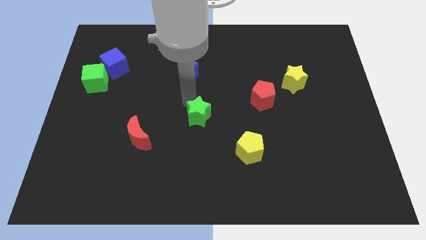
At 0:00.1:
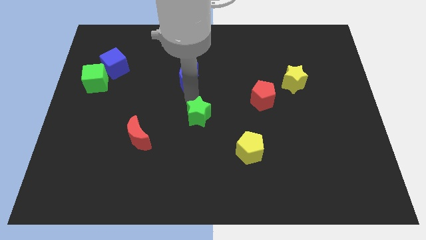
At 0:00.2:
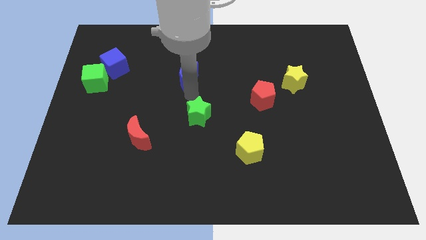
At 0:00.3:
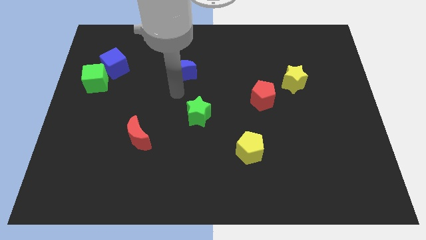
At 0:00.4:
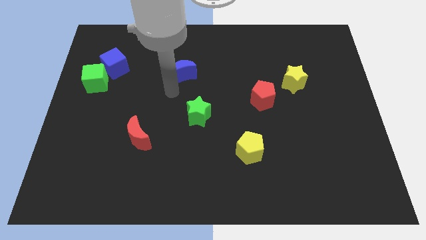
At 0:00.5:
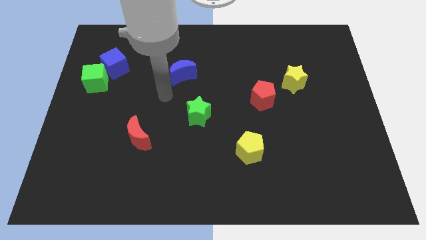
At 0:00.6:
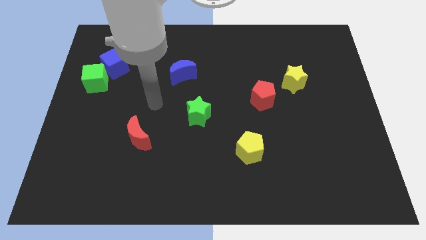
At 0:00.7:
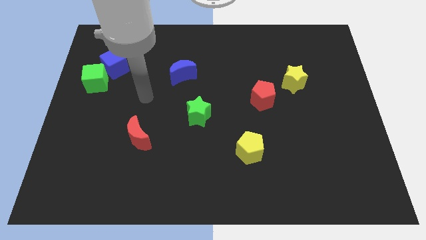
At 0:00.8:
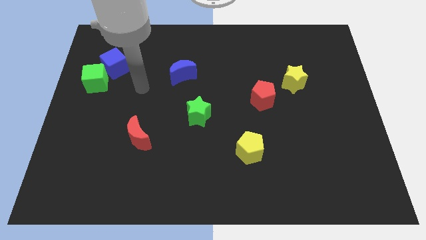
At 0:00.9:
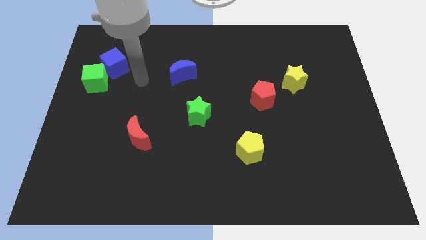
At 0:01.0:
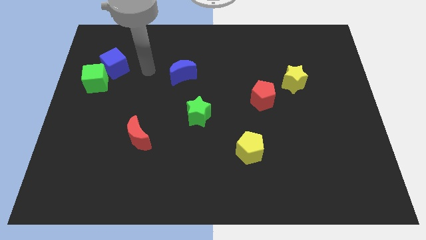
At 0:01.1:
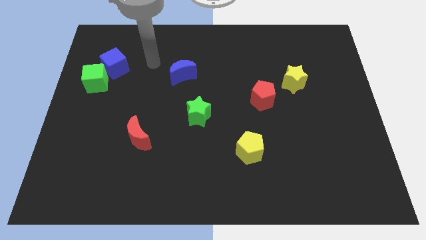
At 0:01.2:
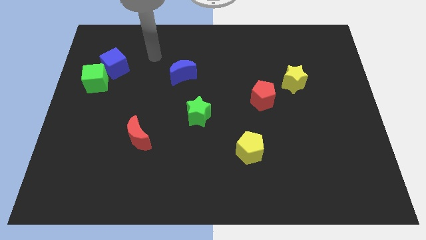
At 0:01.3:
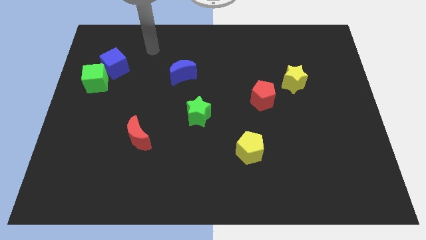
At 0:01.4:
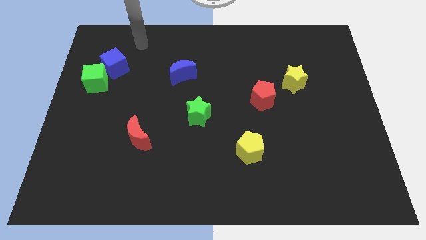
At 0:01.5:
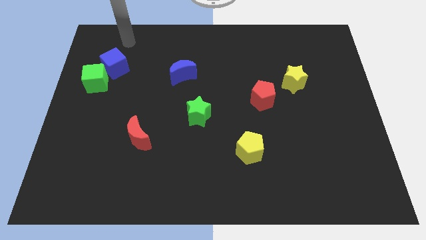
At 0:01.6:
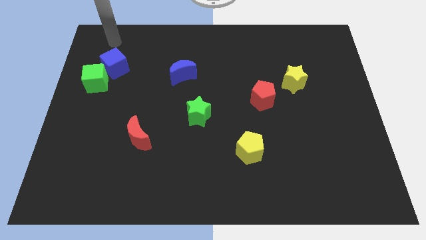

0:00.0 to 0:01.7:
move the arm away from the green star

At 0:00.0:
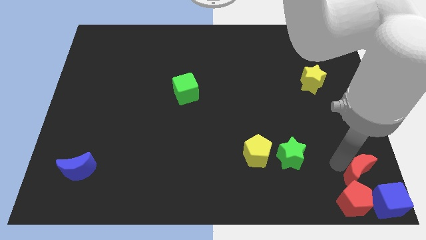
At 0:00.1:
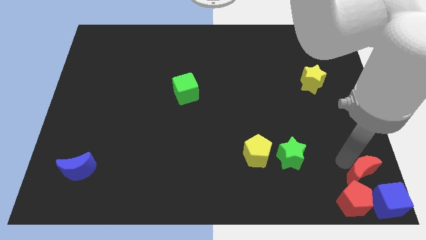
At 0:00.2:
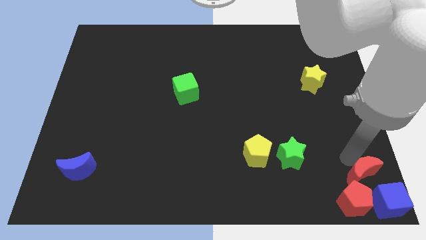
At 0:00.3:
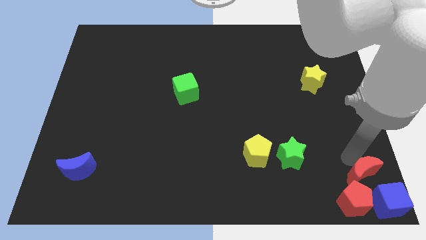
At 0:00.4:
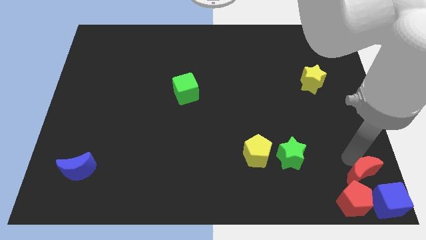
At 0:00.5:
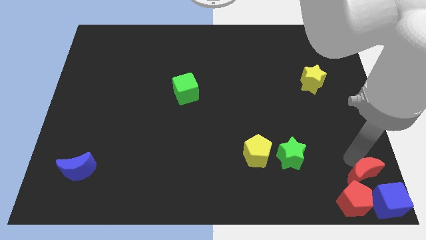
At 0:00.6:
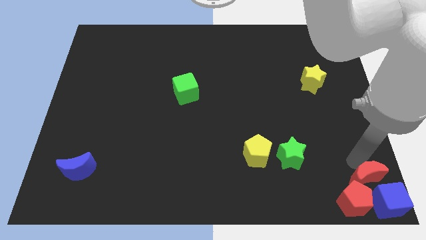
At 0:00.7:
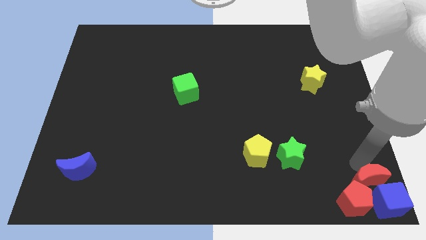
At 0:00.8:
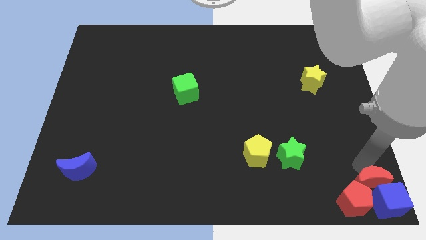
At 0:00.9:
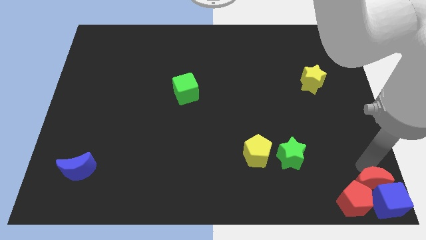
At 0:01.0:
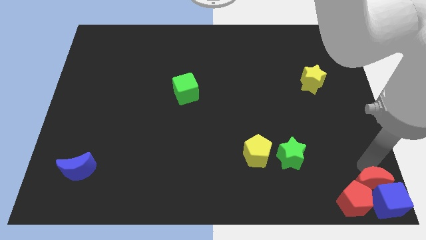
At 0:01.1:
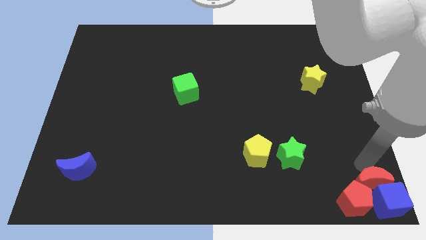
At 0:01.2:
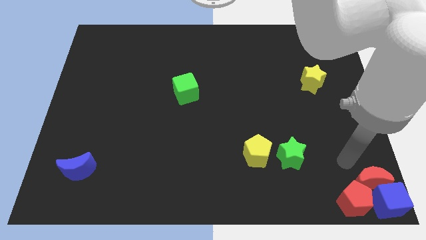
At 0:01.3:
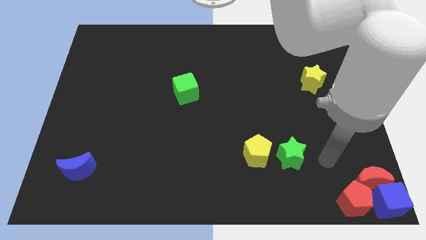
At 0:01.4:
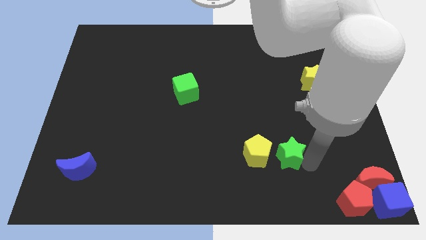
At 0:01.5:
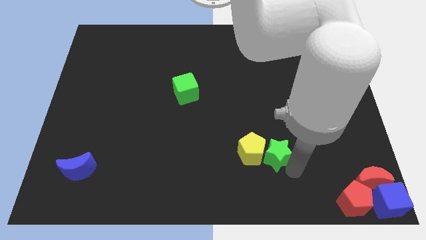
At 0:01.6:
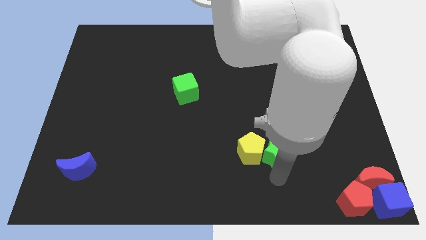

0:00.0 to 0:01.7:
place red crescent on top of the other blocks

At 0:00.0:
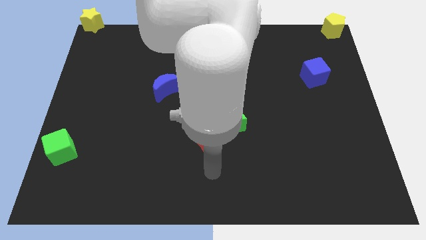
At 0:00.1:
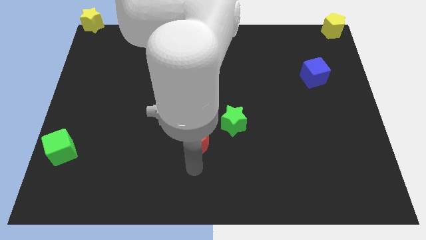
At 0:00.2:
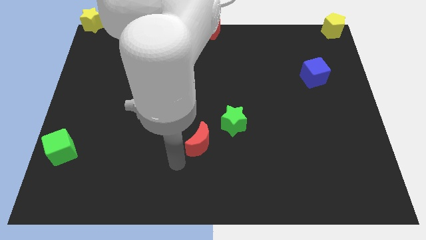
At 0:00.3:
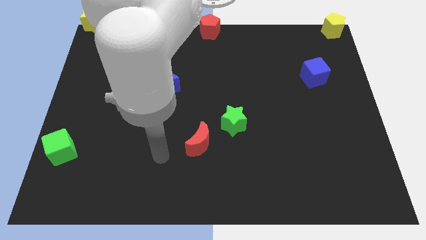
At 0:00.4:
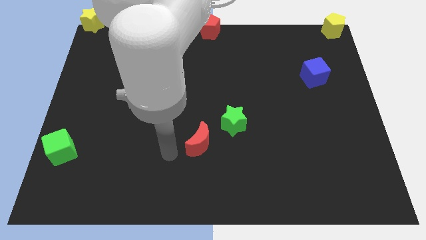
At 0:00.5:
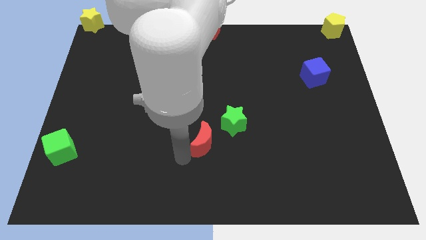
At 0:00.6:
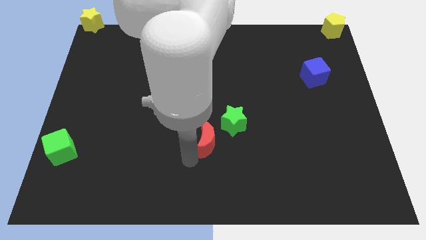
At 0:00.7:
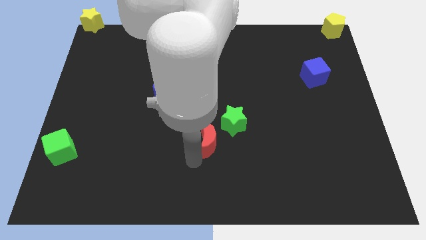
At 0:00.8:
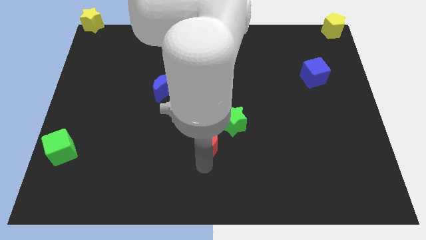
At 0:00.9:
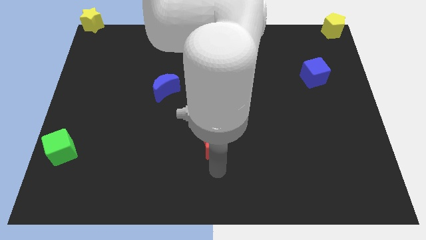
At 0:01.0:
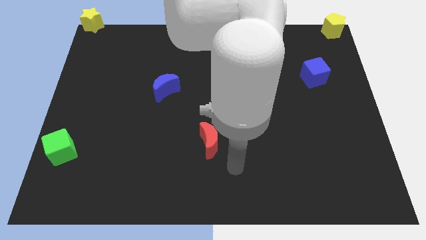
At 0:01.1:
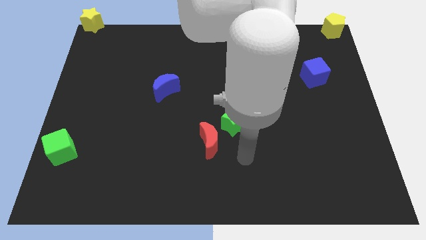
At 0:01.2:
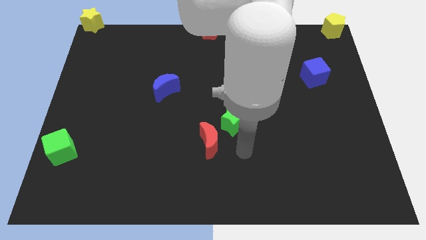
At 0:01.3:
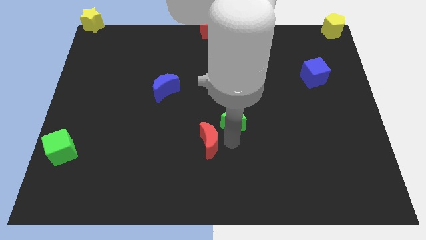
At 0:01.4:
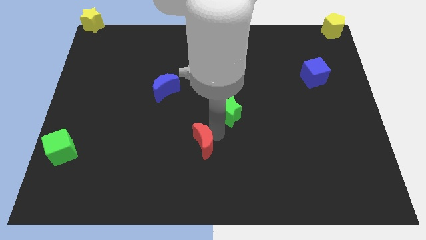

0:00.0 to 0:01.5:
move your arm in between red crescent and green star

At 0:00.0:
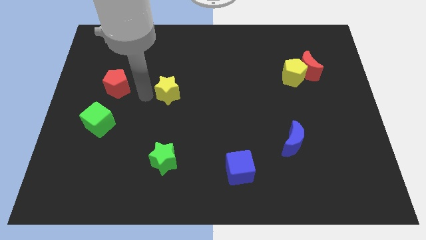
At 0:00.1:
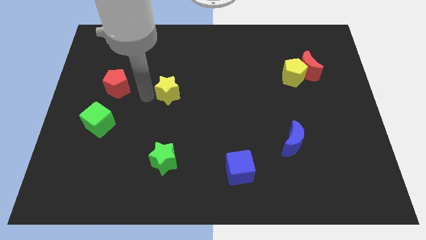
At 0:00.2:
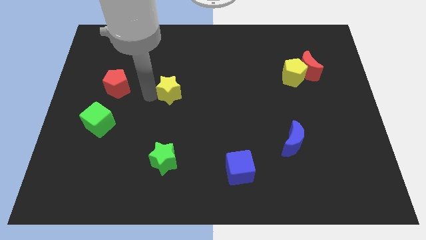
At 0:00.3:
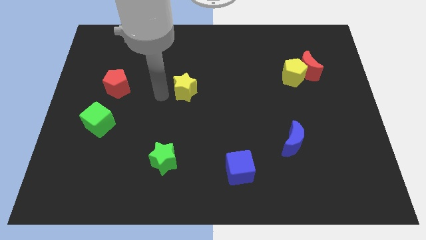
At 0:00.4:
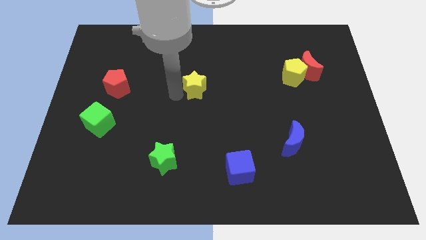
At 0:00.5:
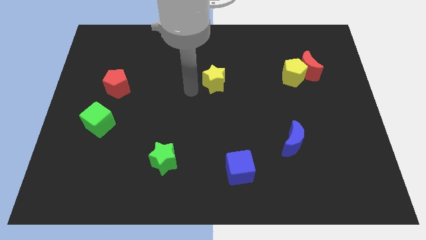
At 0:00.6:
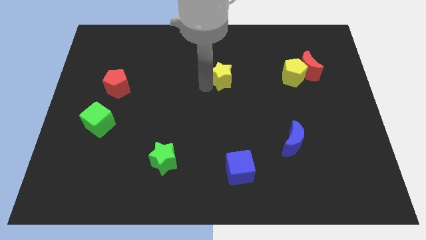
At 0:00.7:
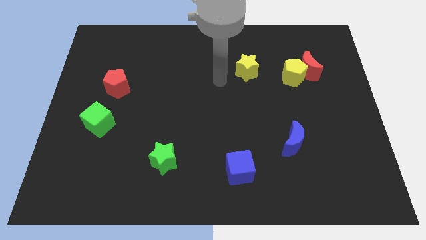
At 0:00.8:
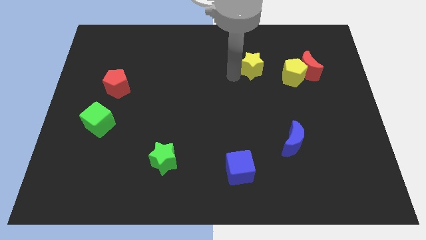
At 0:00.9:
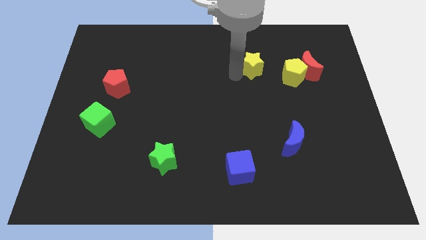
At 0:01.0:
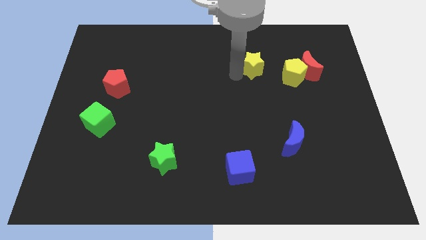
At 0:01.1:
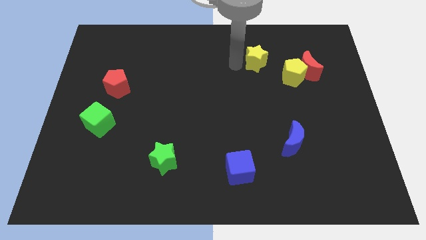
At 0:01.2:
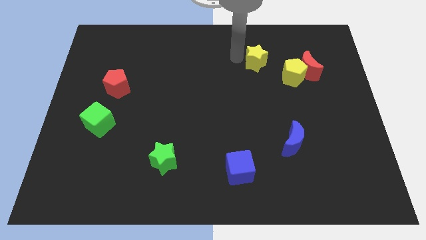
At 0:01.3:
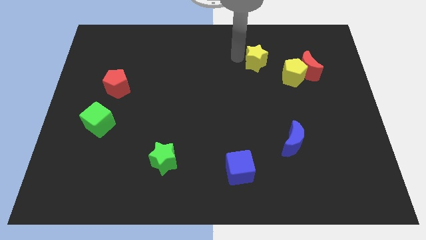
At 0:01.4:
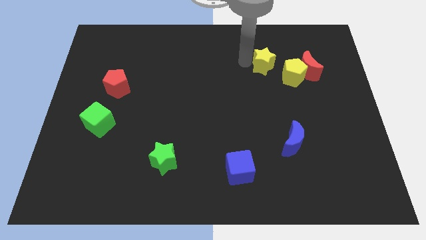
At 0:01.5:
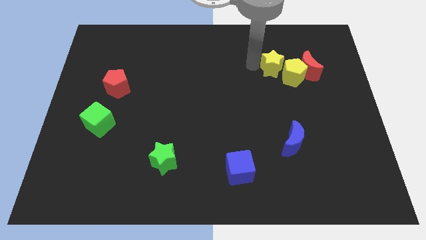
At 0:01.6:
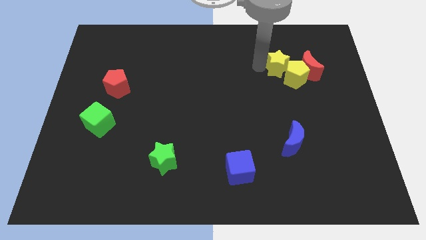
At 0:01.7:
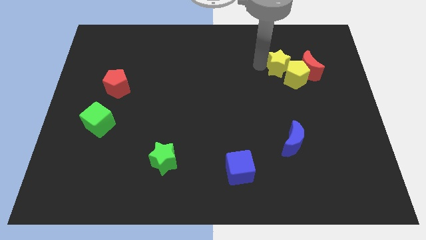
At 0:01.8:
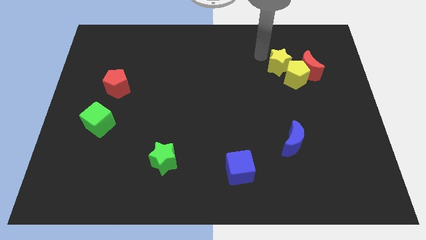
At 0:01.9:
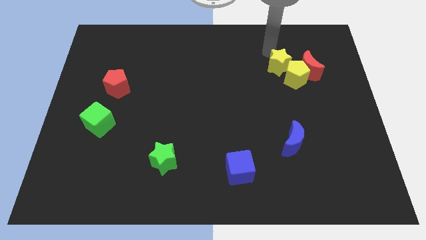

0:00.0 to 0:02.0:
push the yellow star into the yellow pentagon
